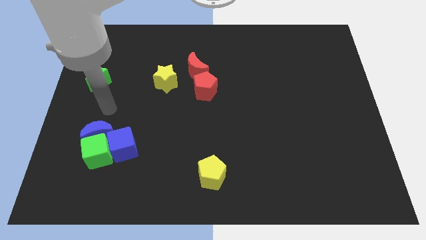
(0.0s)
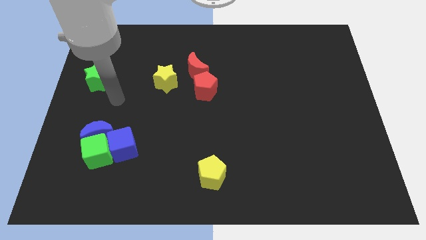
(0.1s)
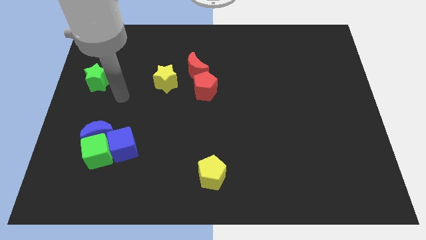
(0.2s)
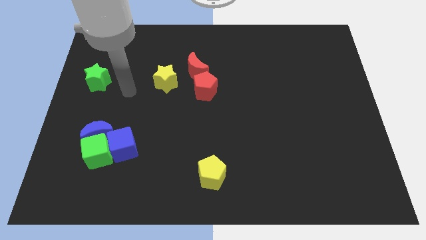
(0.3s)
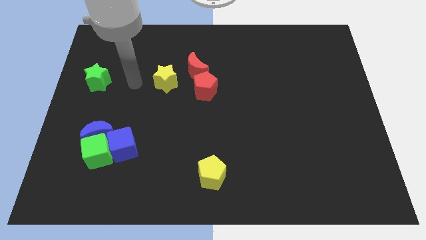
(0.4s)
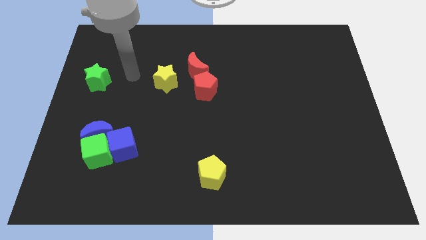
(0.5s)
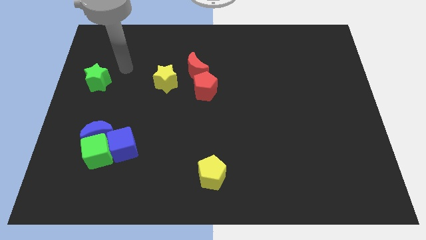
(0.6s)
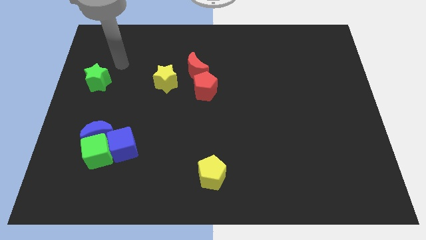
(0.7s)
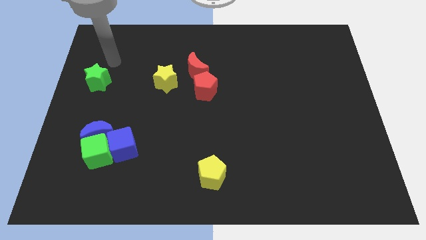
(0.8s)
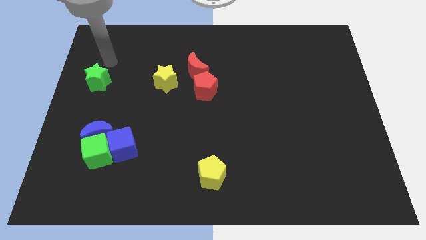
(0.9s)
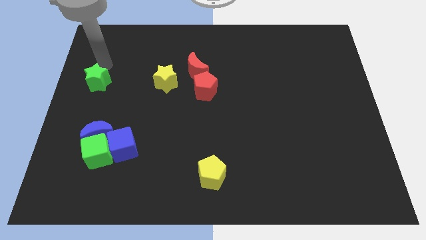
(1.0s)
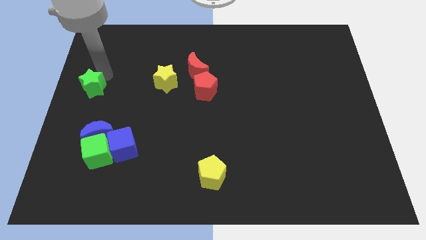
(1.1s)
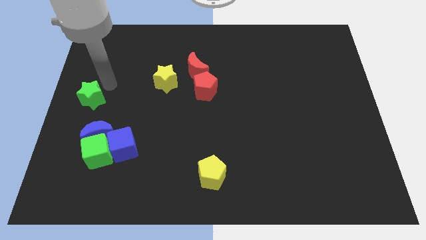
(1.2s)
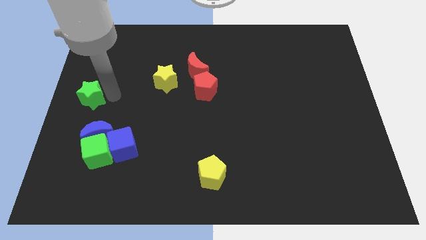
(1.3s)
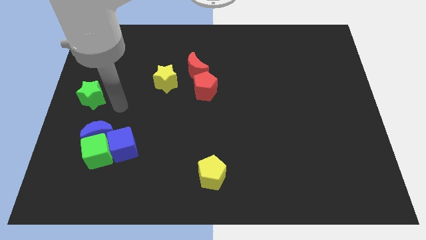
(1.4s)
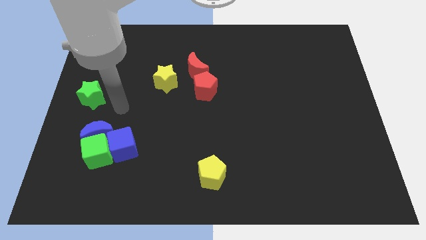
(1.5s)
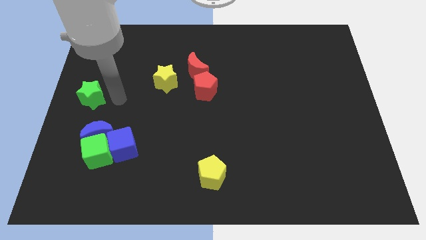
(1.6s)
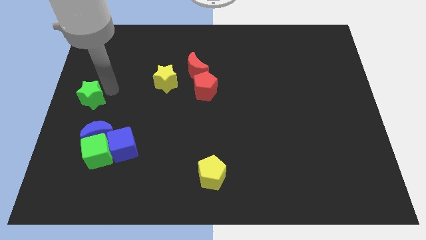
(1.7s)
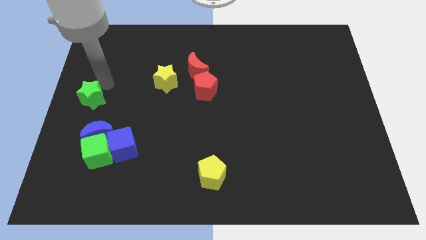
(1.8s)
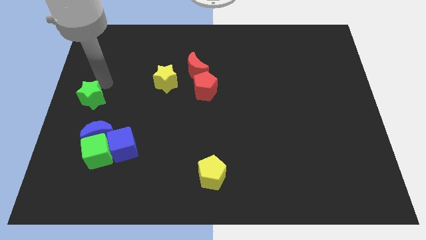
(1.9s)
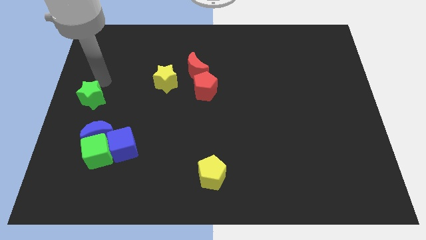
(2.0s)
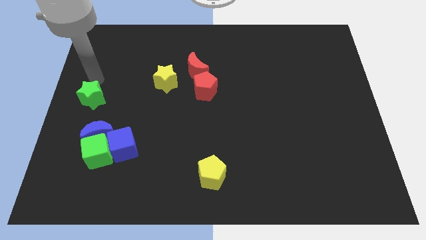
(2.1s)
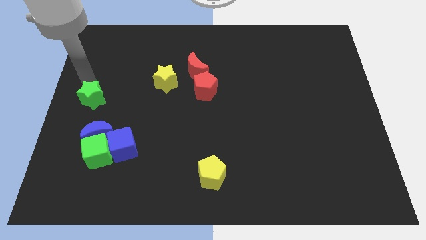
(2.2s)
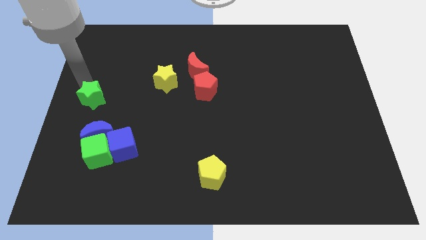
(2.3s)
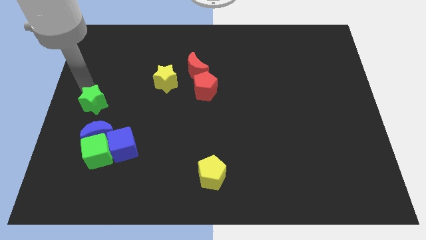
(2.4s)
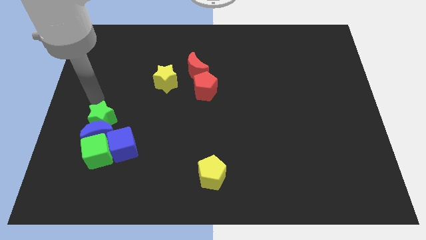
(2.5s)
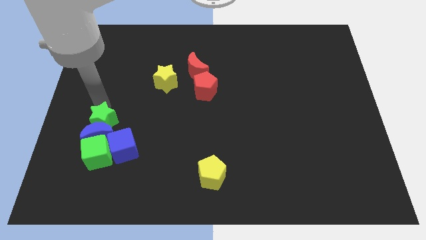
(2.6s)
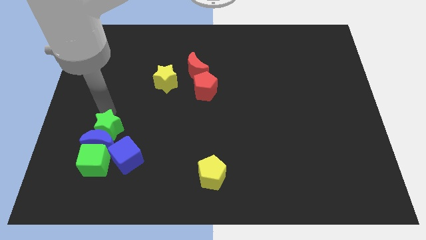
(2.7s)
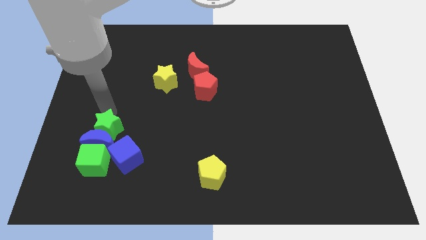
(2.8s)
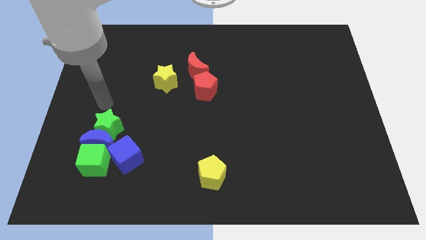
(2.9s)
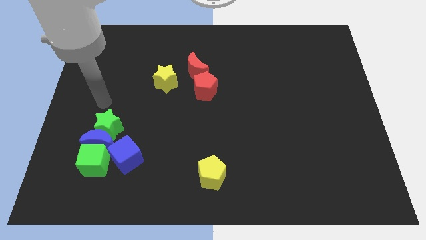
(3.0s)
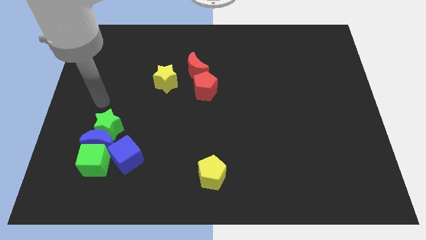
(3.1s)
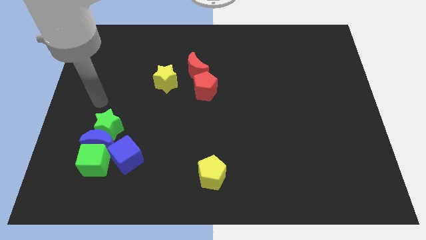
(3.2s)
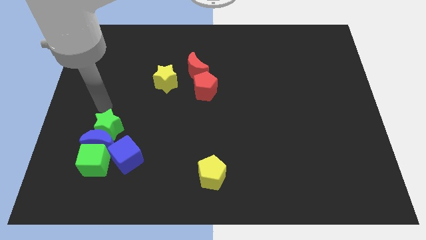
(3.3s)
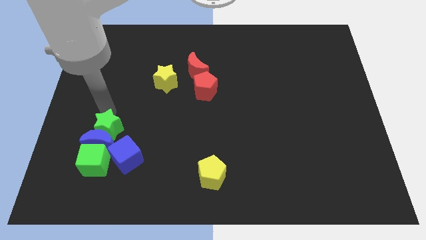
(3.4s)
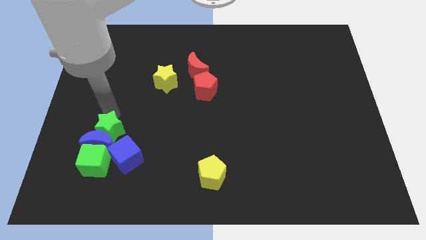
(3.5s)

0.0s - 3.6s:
move the green star into the blue crescent

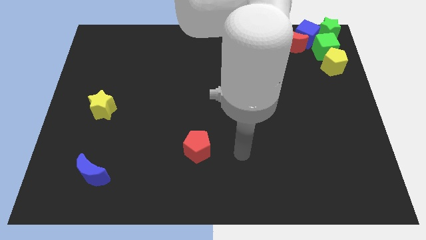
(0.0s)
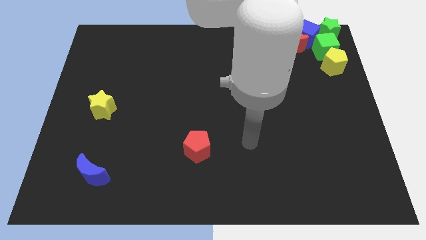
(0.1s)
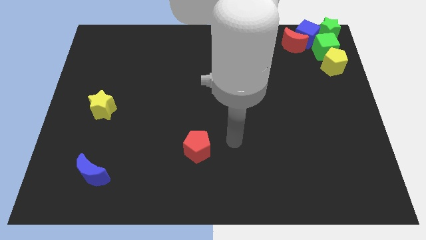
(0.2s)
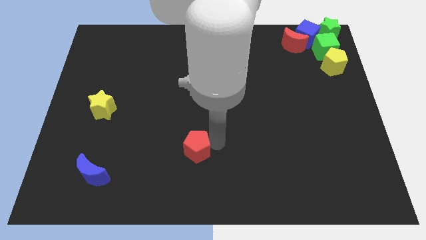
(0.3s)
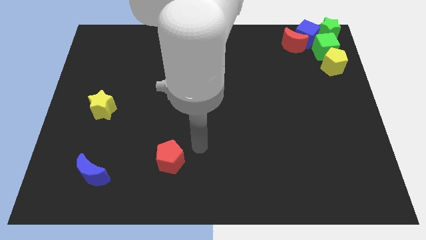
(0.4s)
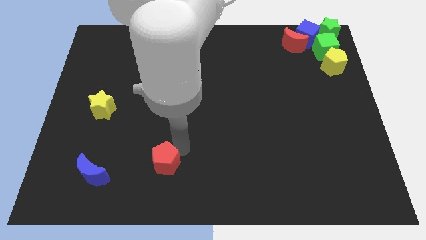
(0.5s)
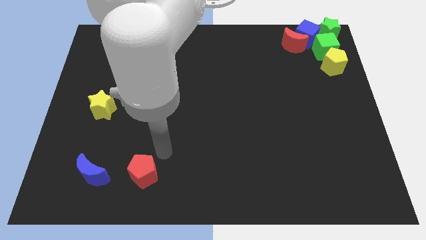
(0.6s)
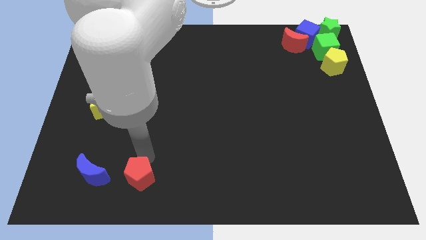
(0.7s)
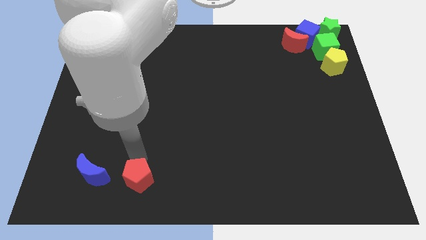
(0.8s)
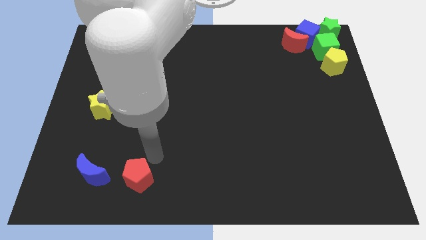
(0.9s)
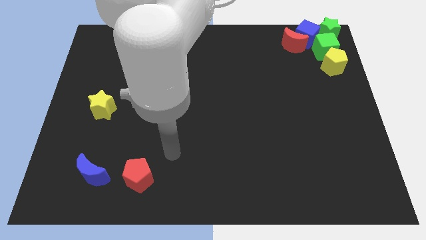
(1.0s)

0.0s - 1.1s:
push the red pentagon to the right of the blue crescent

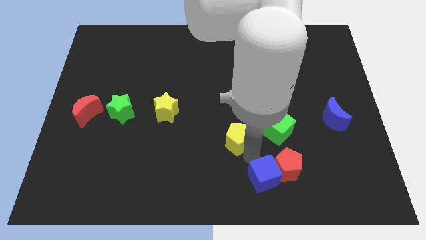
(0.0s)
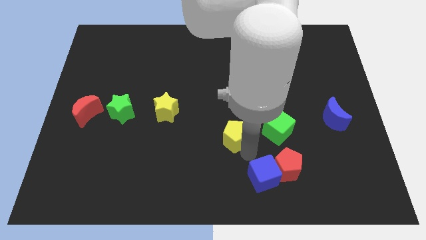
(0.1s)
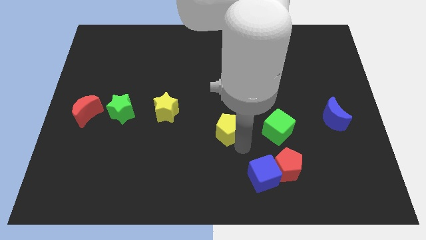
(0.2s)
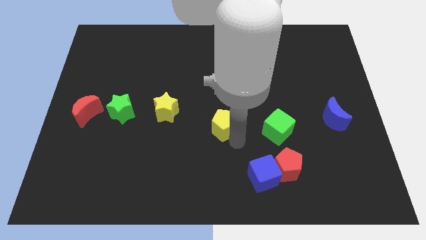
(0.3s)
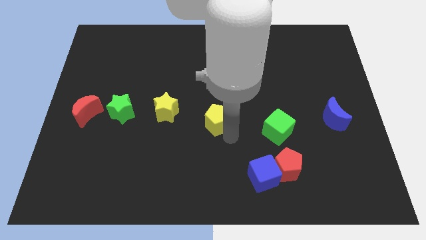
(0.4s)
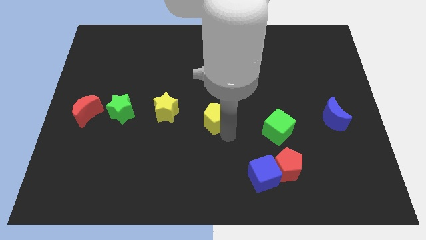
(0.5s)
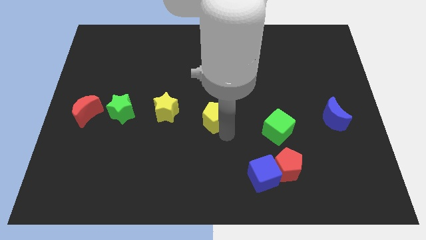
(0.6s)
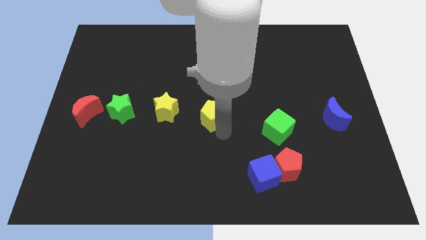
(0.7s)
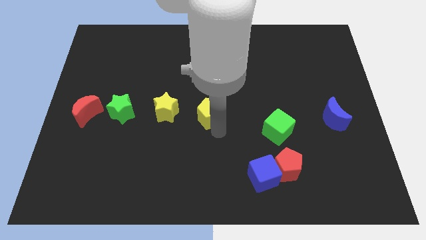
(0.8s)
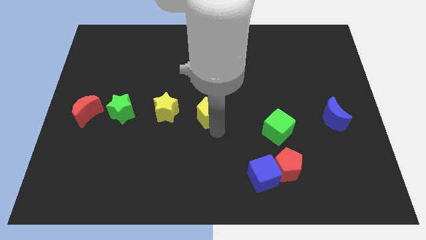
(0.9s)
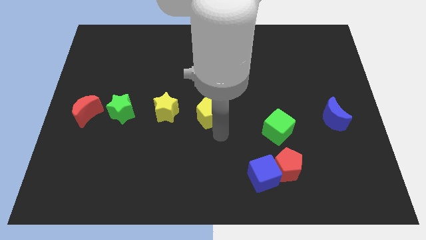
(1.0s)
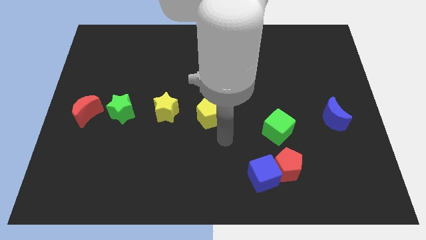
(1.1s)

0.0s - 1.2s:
move the yellow pentagon towards the right side of the yellow star

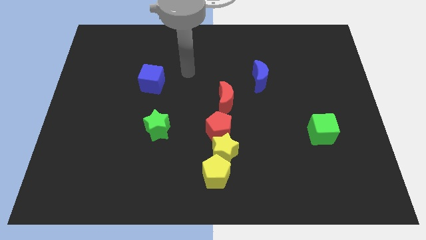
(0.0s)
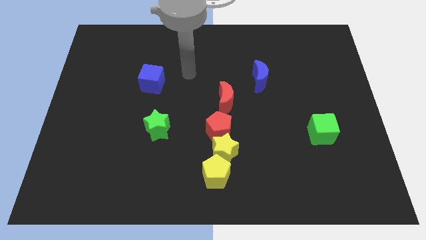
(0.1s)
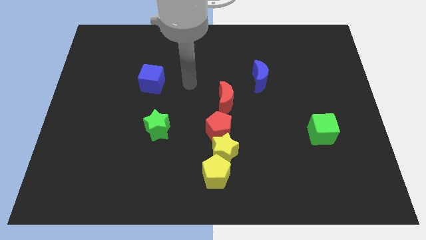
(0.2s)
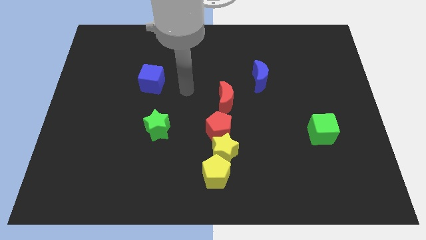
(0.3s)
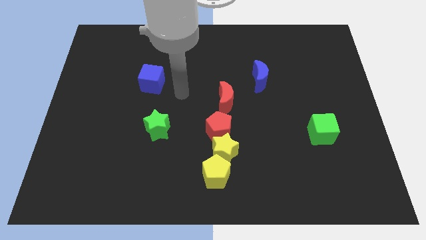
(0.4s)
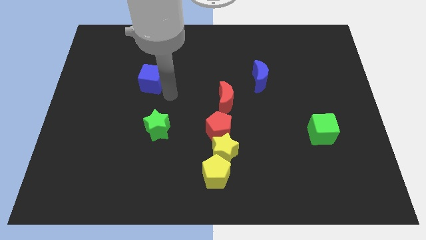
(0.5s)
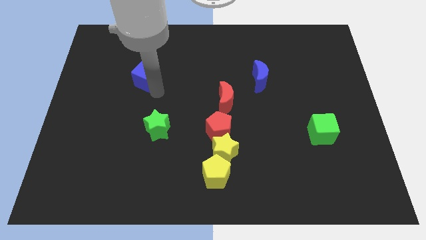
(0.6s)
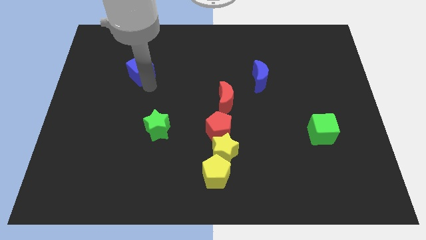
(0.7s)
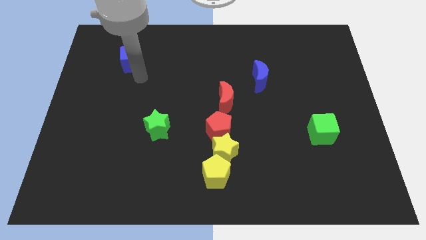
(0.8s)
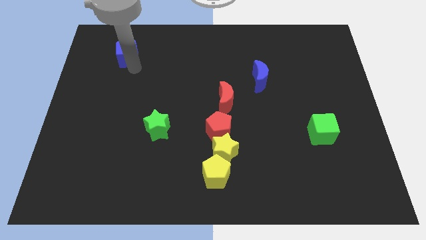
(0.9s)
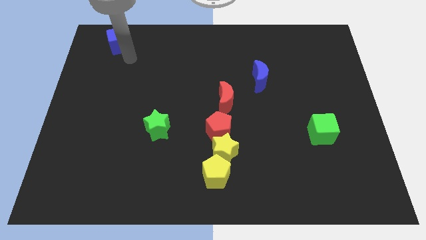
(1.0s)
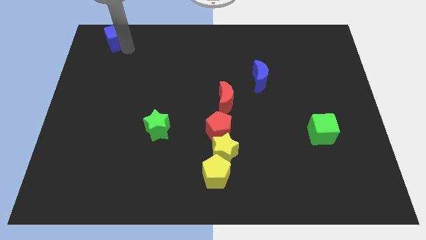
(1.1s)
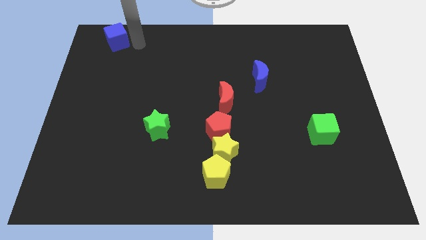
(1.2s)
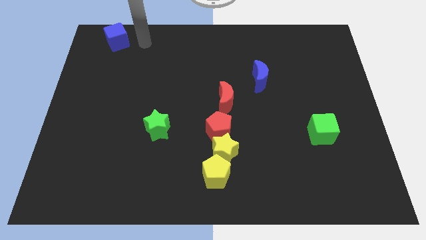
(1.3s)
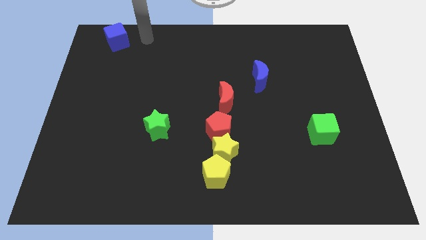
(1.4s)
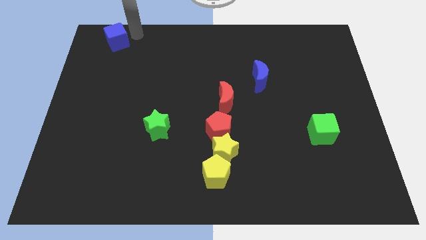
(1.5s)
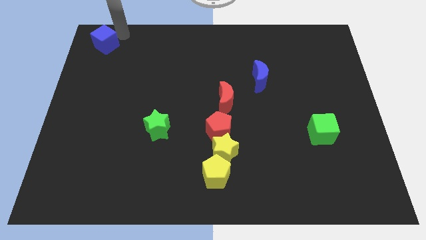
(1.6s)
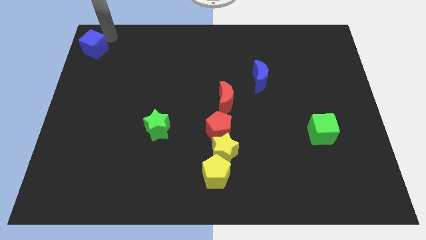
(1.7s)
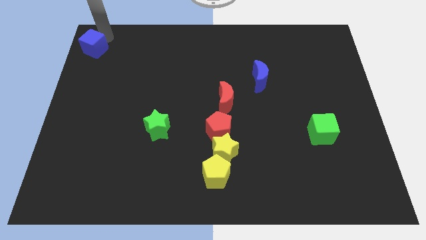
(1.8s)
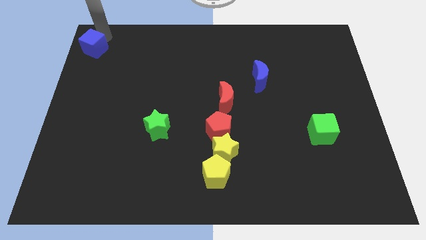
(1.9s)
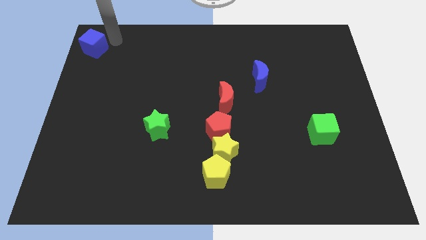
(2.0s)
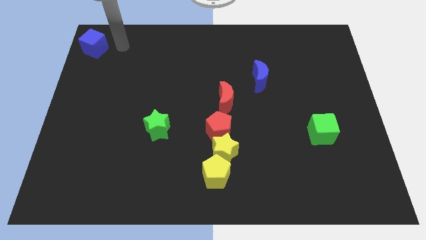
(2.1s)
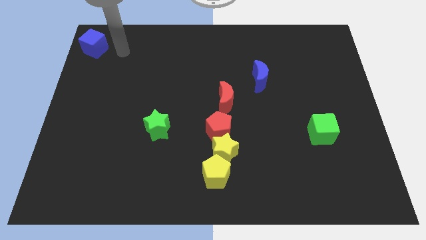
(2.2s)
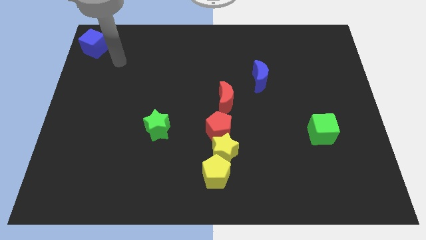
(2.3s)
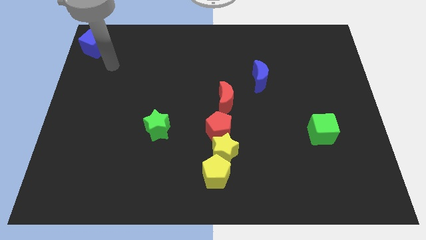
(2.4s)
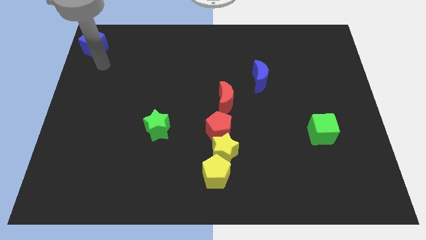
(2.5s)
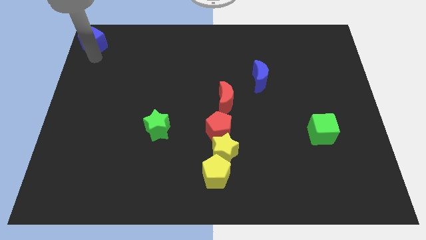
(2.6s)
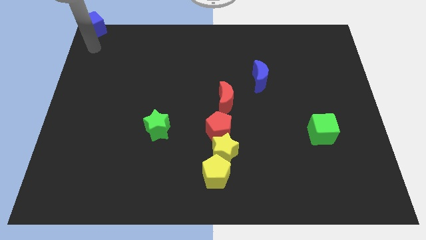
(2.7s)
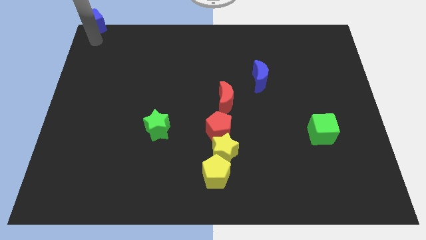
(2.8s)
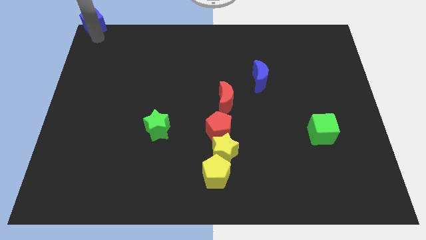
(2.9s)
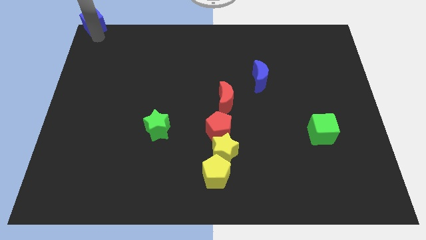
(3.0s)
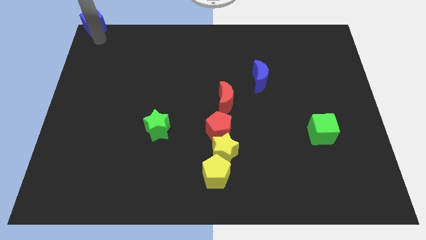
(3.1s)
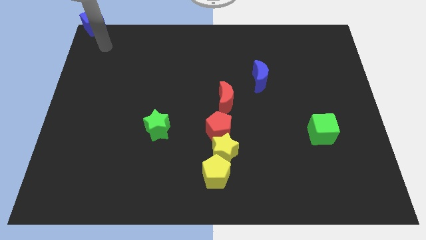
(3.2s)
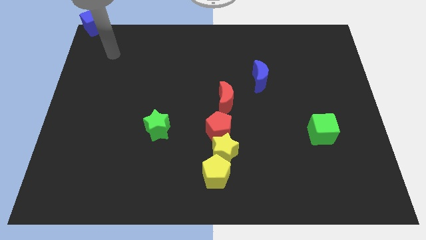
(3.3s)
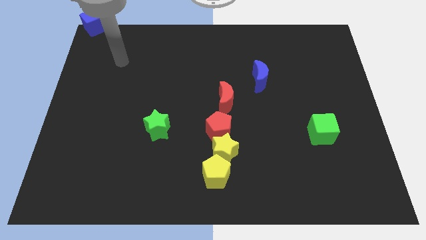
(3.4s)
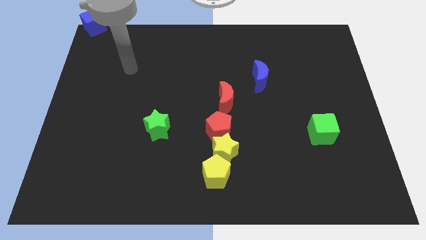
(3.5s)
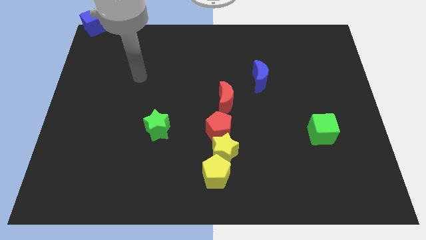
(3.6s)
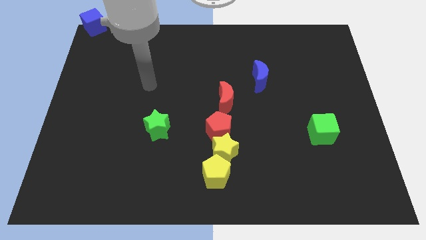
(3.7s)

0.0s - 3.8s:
place the blue cube at top left corner of the board
